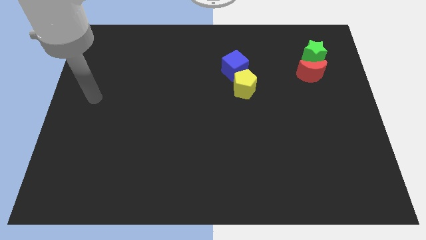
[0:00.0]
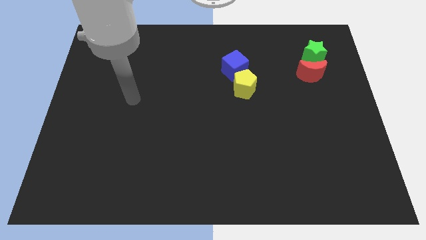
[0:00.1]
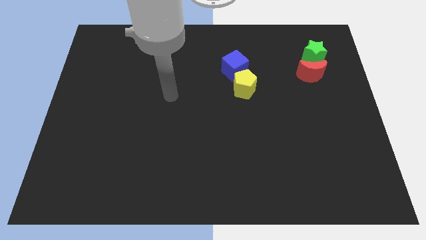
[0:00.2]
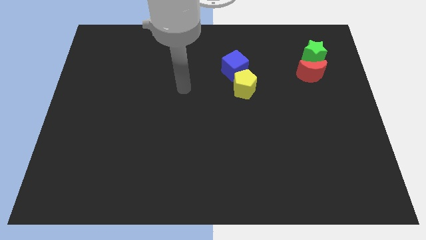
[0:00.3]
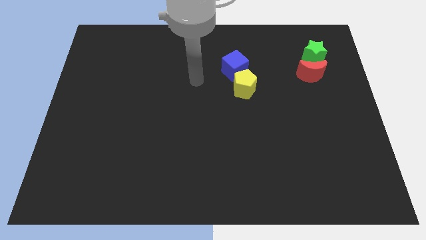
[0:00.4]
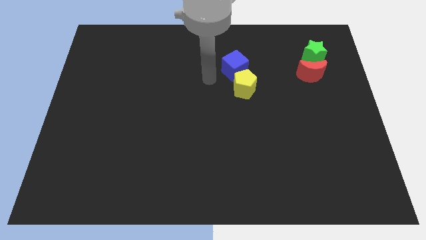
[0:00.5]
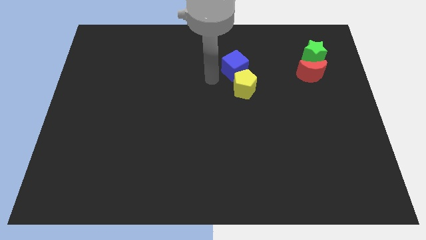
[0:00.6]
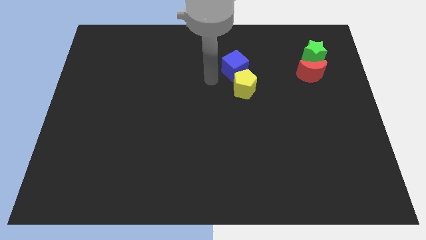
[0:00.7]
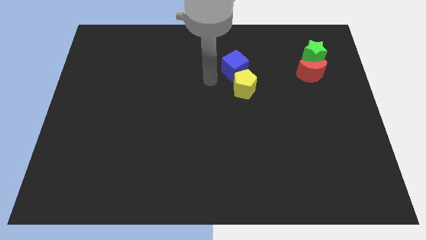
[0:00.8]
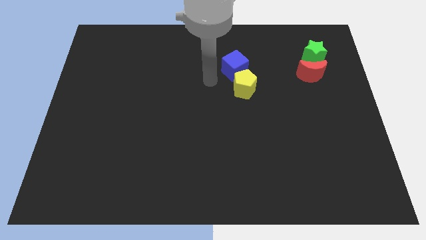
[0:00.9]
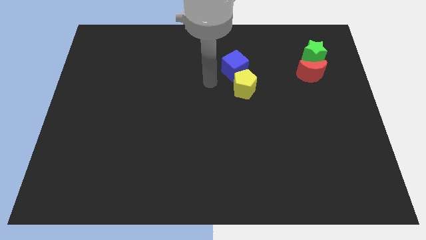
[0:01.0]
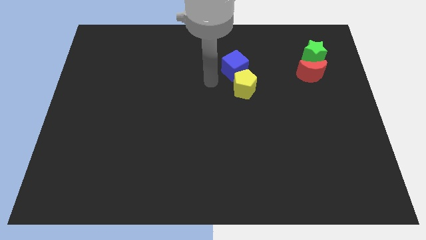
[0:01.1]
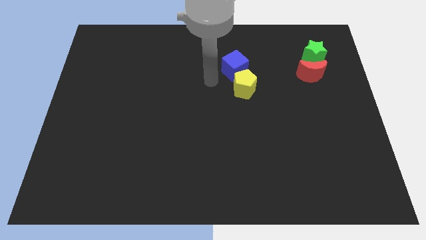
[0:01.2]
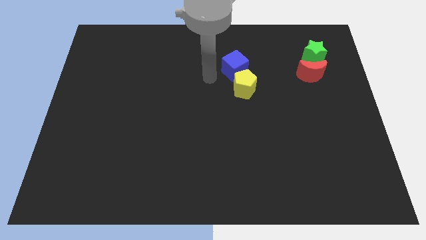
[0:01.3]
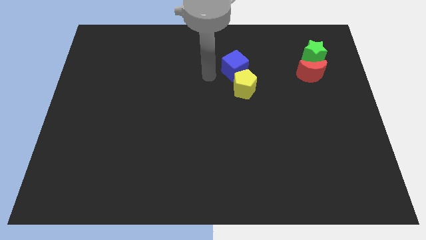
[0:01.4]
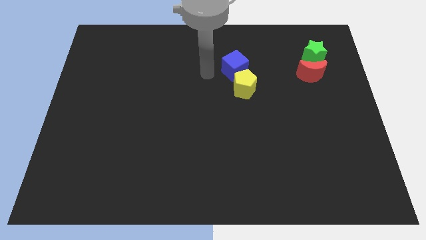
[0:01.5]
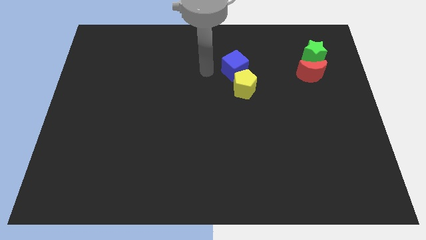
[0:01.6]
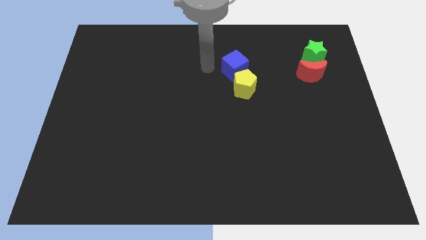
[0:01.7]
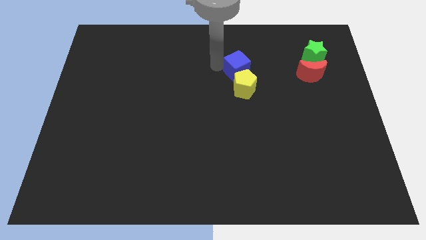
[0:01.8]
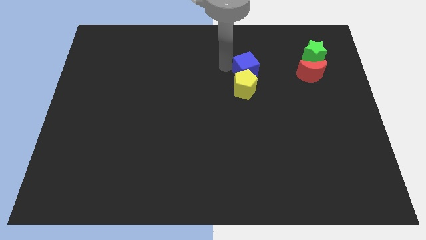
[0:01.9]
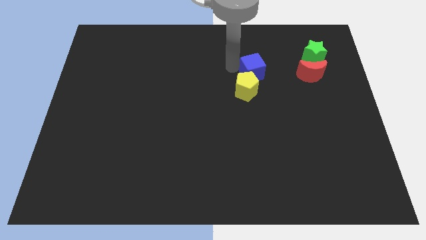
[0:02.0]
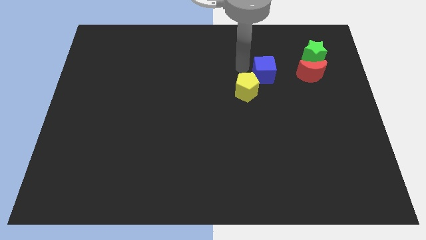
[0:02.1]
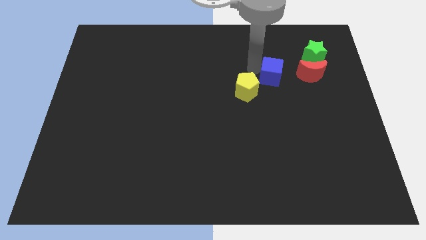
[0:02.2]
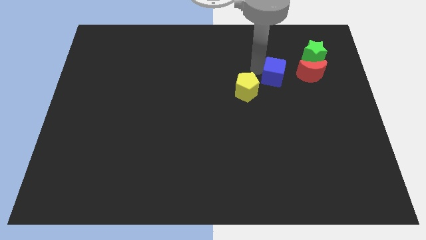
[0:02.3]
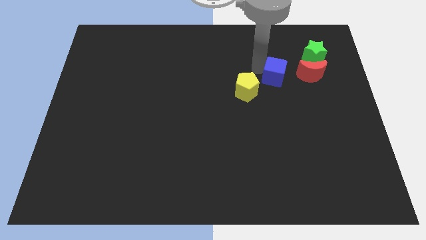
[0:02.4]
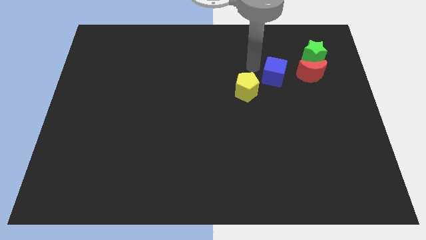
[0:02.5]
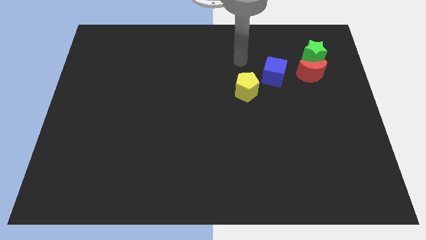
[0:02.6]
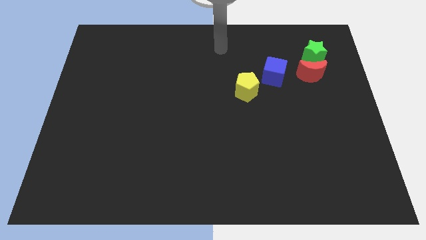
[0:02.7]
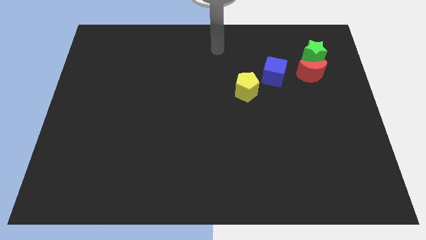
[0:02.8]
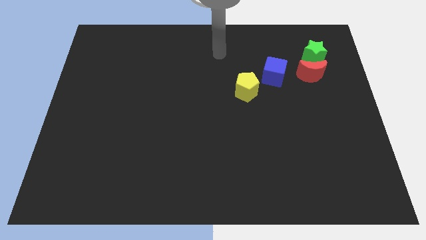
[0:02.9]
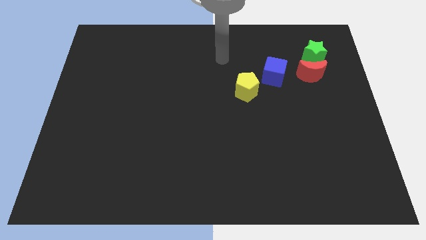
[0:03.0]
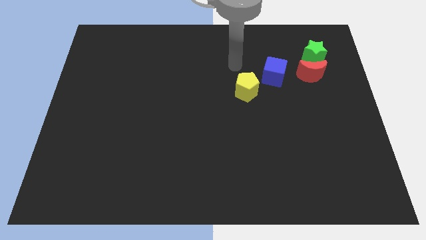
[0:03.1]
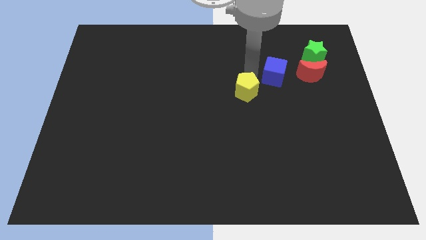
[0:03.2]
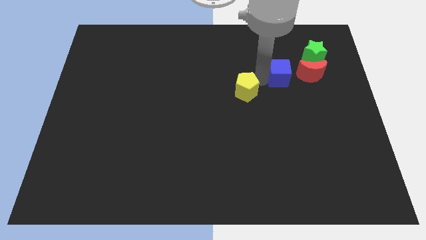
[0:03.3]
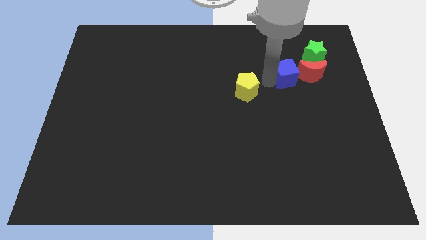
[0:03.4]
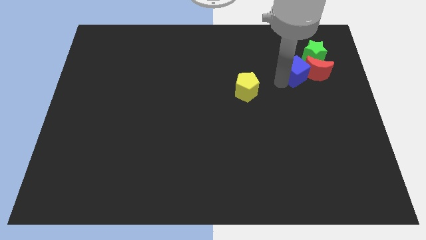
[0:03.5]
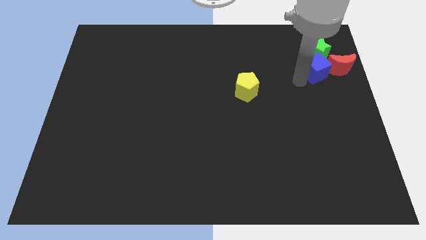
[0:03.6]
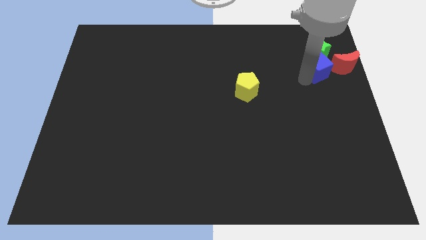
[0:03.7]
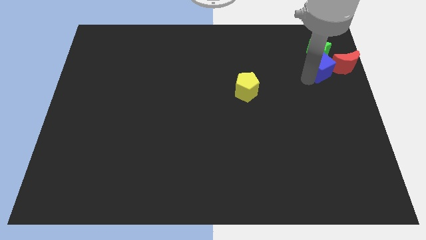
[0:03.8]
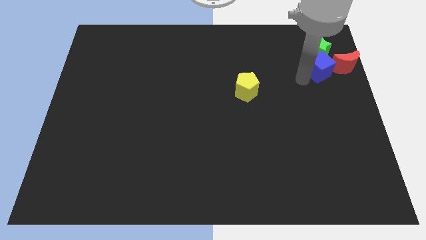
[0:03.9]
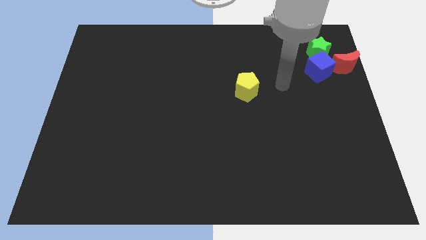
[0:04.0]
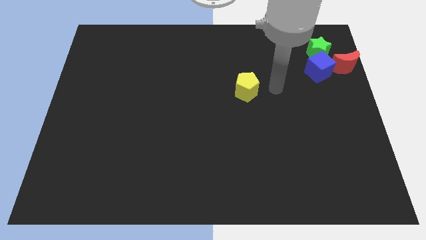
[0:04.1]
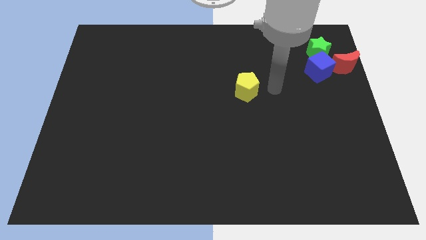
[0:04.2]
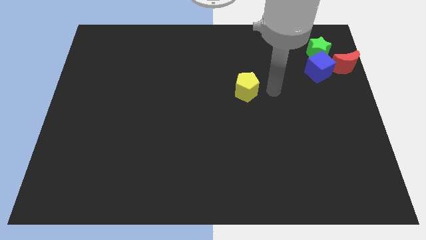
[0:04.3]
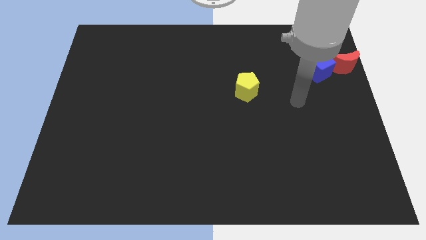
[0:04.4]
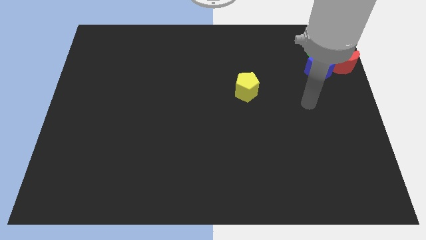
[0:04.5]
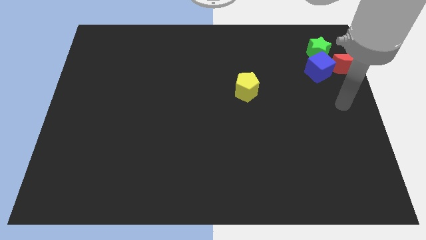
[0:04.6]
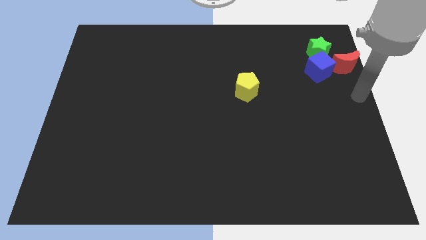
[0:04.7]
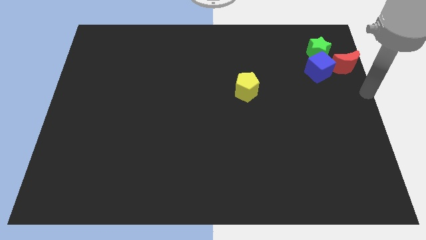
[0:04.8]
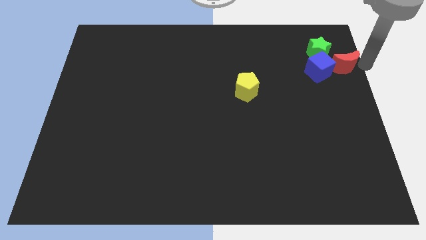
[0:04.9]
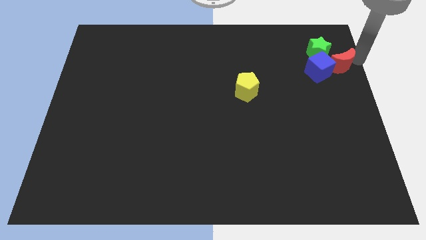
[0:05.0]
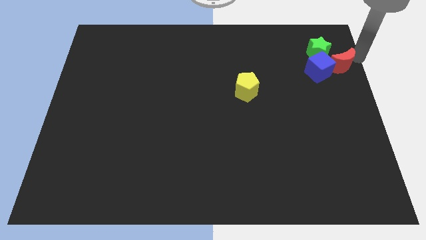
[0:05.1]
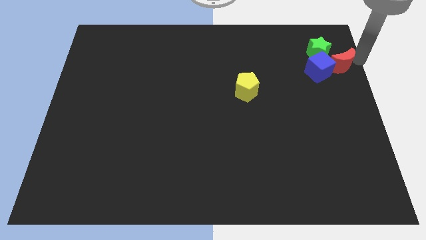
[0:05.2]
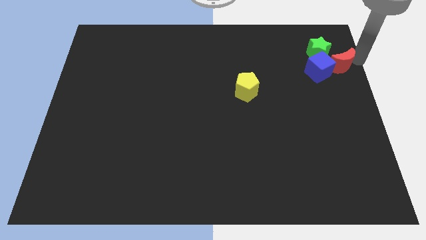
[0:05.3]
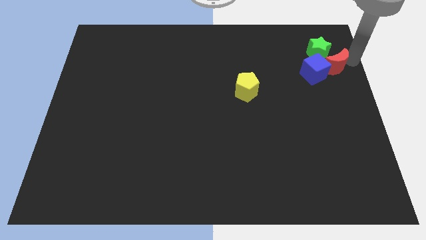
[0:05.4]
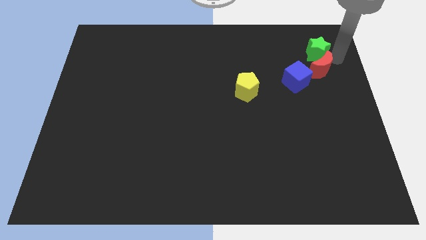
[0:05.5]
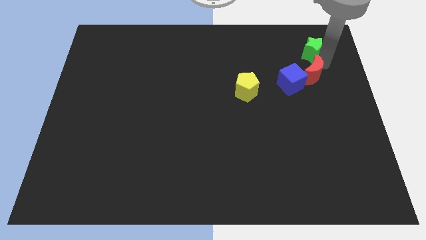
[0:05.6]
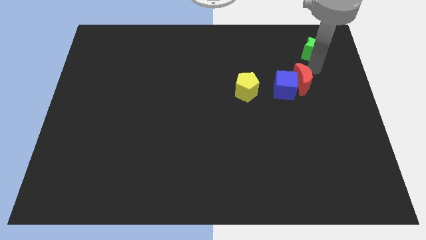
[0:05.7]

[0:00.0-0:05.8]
put the blue cube next to the moon

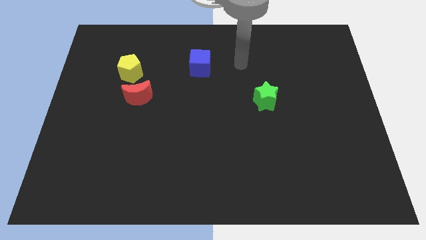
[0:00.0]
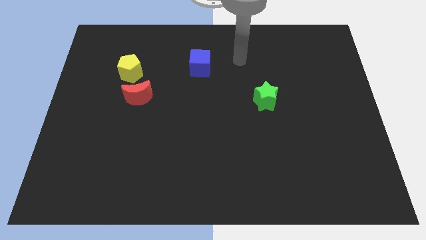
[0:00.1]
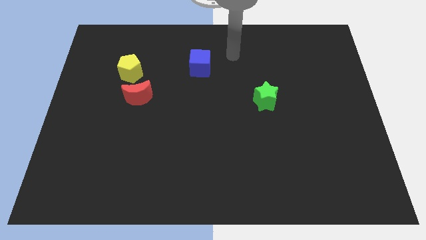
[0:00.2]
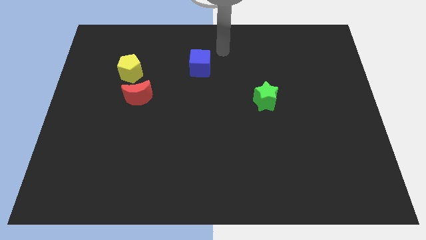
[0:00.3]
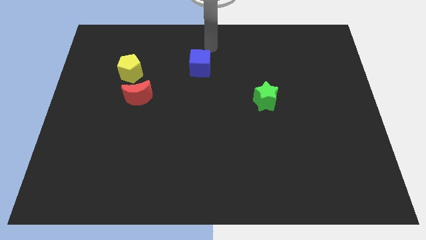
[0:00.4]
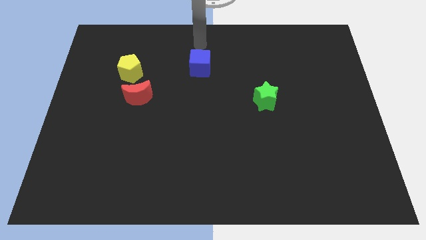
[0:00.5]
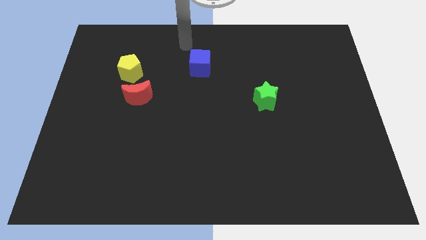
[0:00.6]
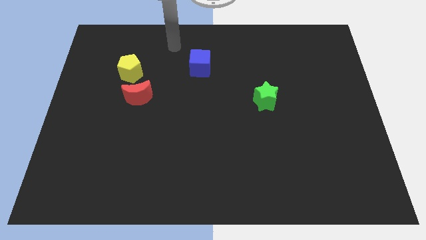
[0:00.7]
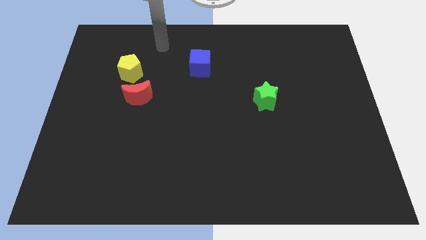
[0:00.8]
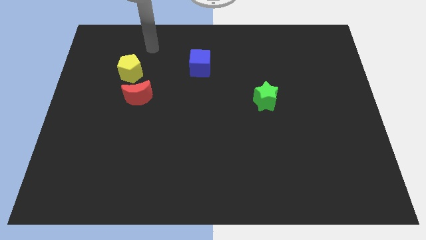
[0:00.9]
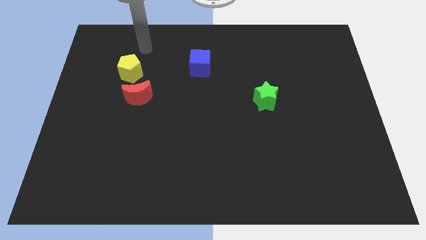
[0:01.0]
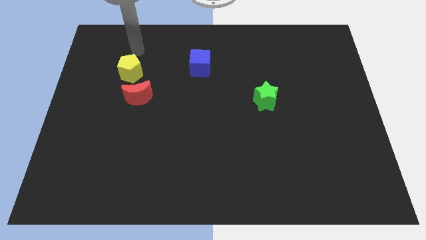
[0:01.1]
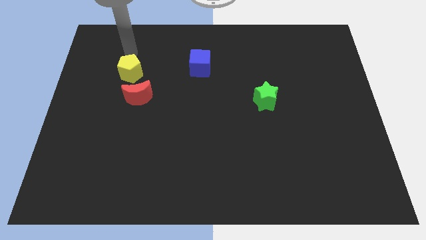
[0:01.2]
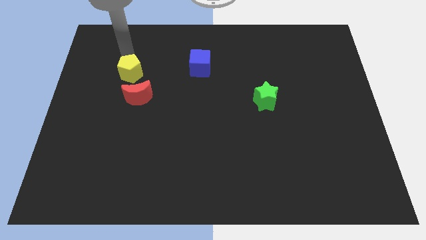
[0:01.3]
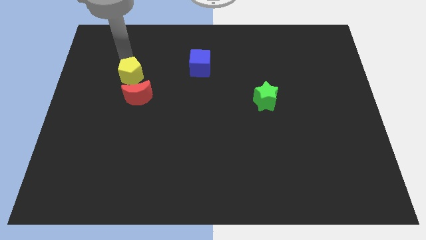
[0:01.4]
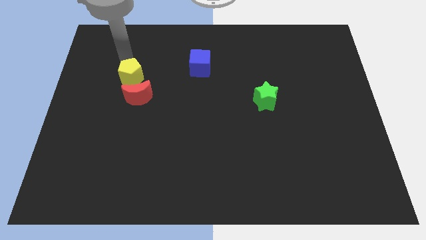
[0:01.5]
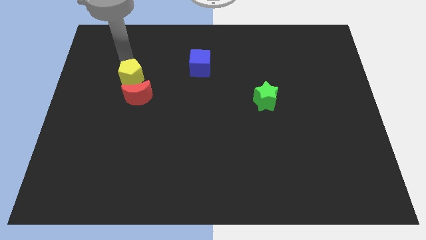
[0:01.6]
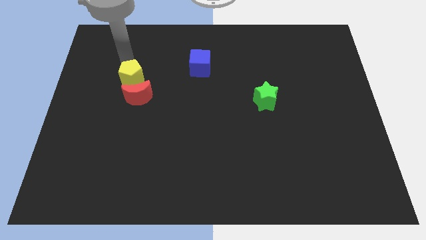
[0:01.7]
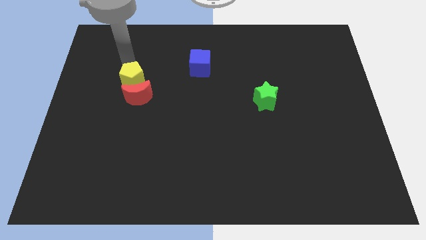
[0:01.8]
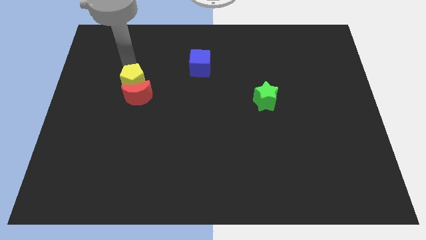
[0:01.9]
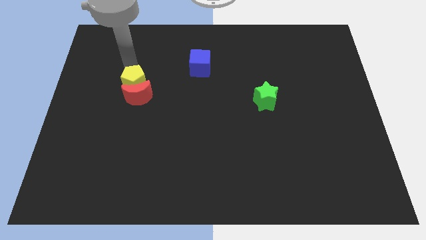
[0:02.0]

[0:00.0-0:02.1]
push the yellow pentagon next to the red moon

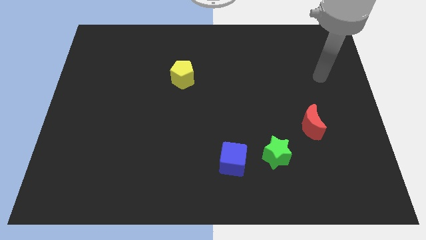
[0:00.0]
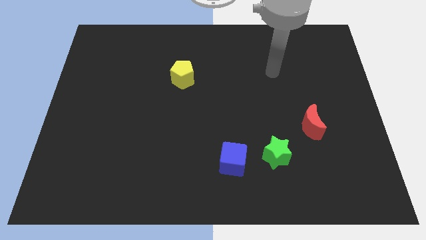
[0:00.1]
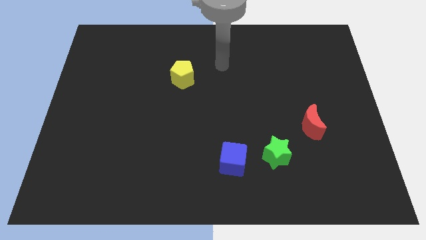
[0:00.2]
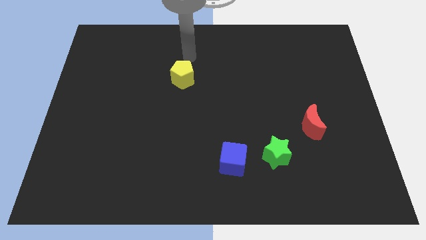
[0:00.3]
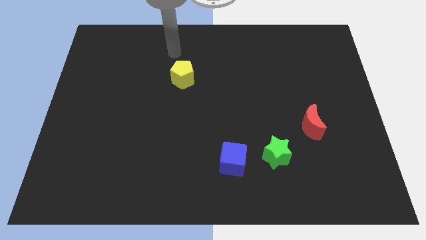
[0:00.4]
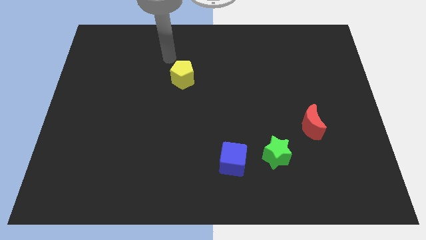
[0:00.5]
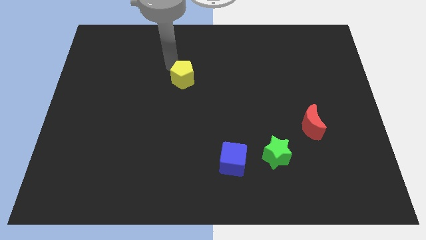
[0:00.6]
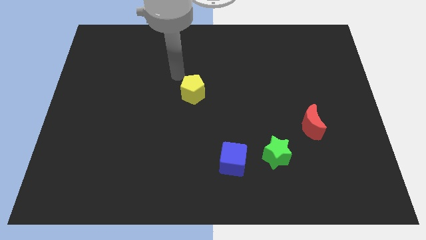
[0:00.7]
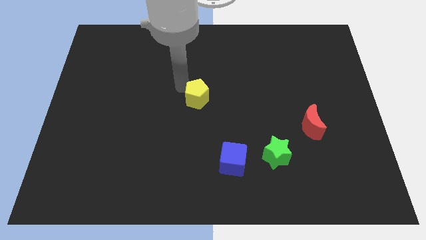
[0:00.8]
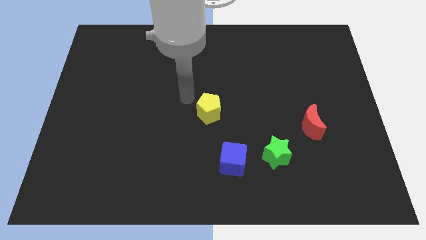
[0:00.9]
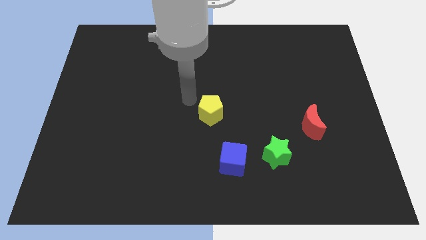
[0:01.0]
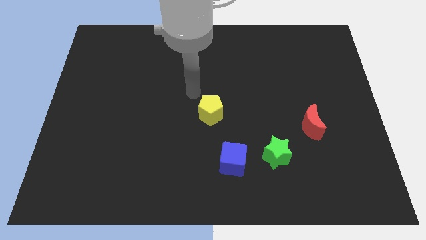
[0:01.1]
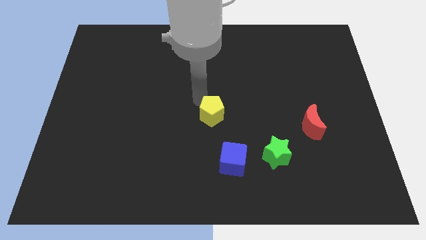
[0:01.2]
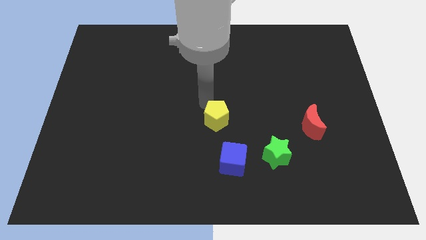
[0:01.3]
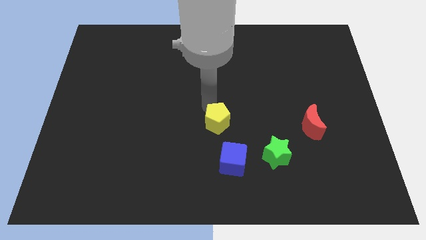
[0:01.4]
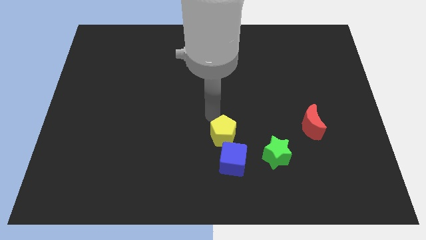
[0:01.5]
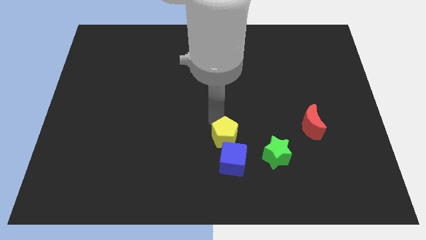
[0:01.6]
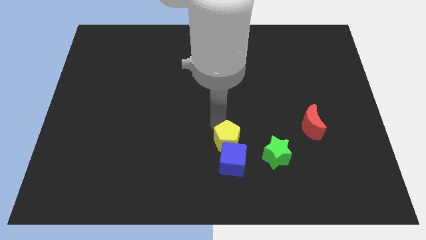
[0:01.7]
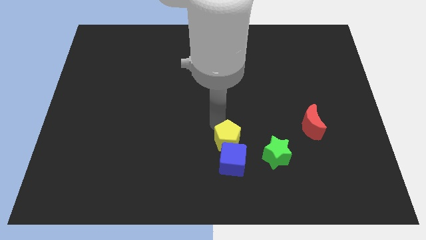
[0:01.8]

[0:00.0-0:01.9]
push the yellow block to the cube
